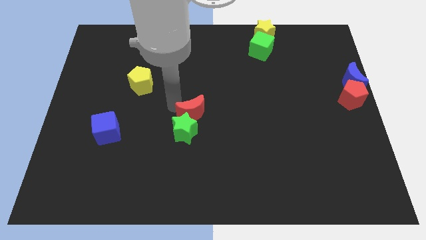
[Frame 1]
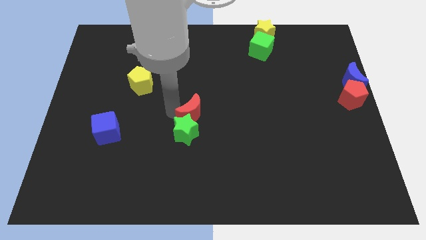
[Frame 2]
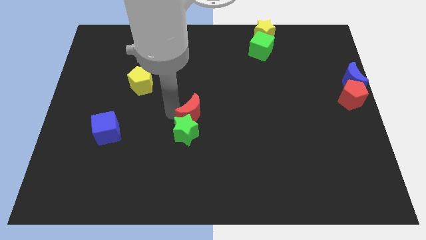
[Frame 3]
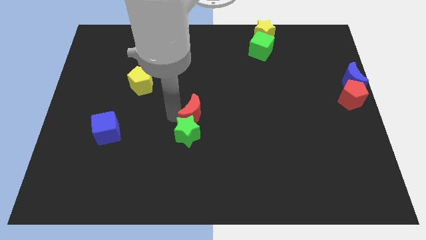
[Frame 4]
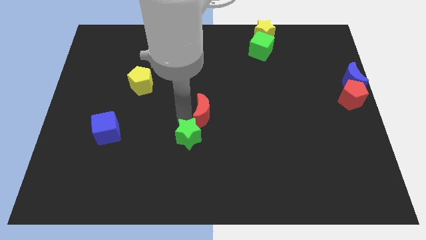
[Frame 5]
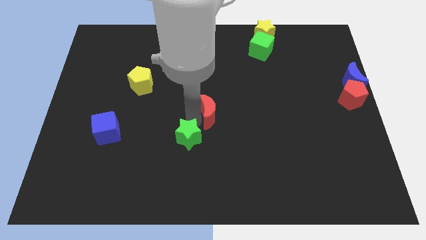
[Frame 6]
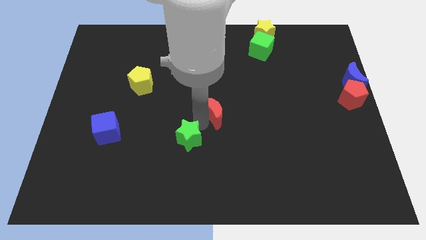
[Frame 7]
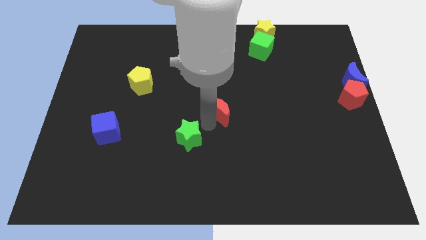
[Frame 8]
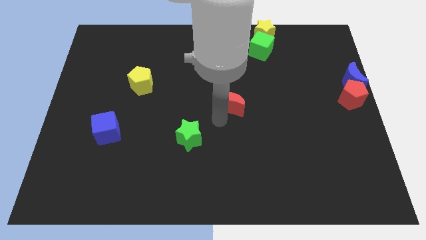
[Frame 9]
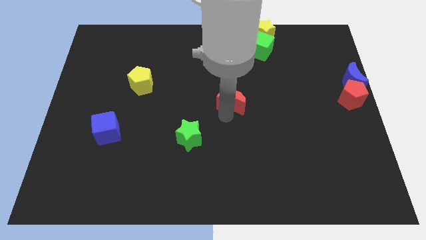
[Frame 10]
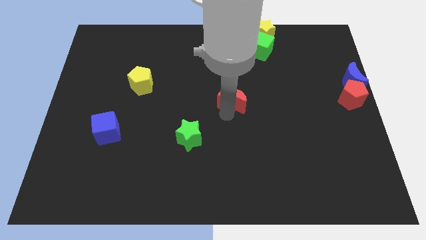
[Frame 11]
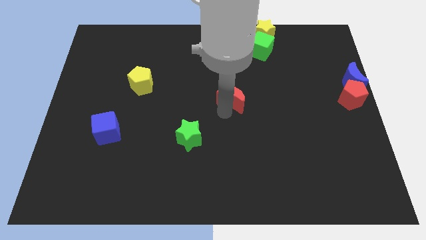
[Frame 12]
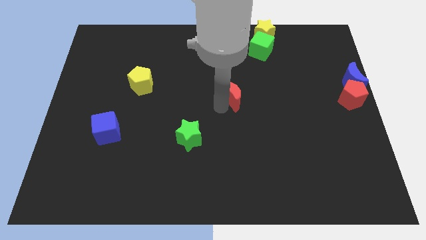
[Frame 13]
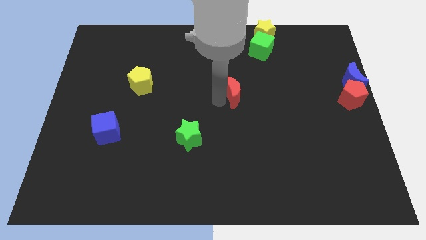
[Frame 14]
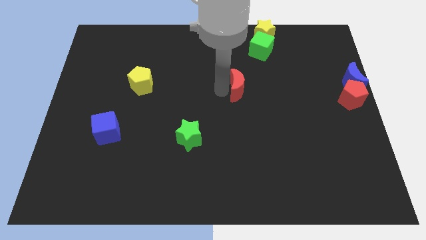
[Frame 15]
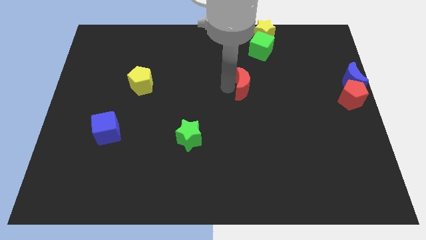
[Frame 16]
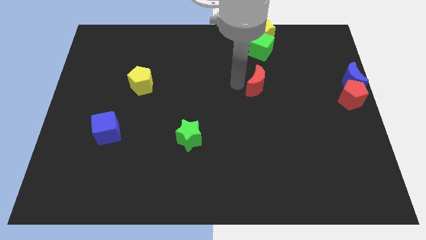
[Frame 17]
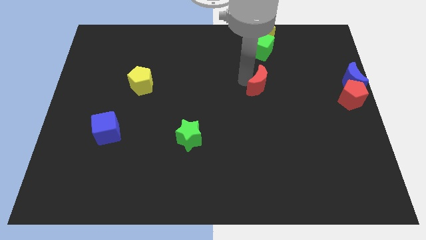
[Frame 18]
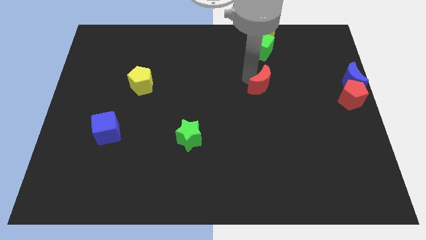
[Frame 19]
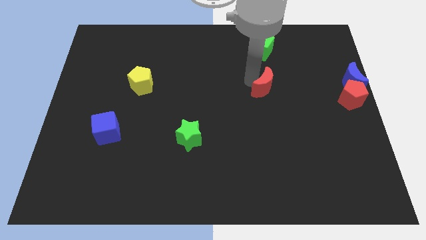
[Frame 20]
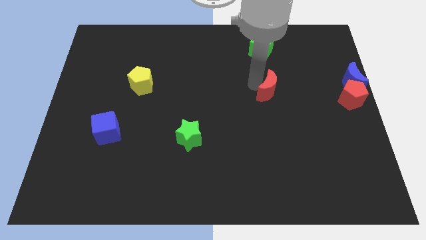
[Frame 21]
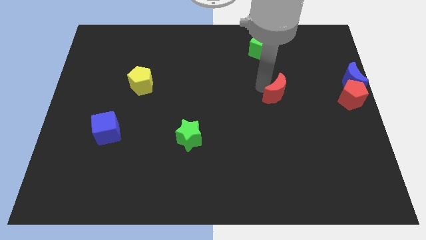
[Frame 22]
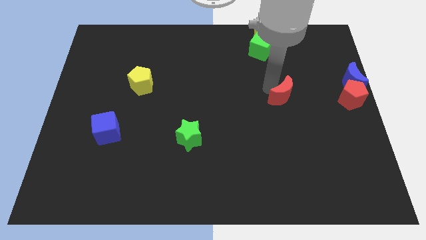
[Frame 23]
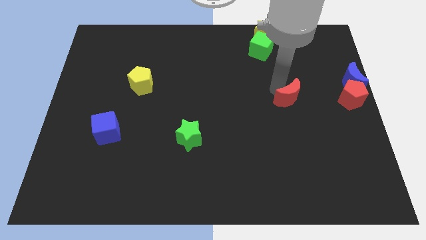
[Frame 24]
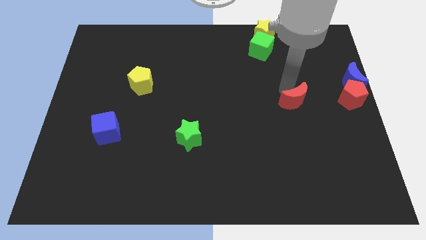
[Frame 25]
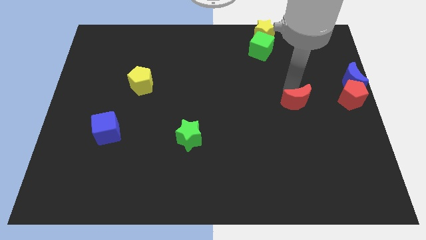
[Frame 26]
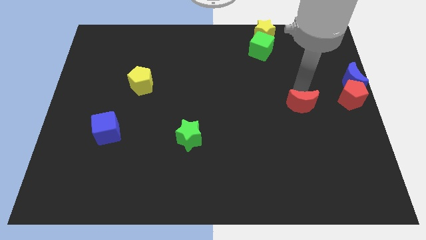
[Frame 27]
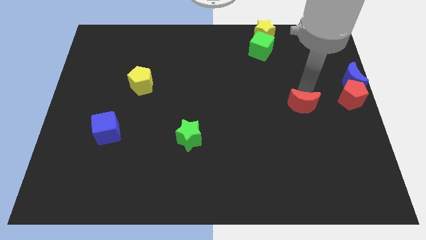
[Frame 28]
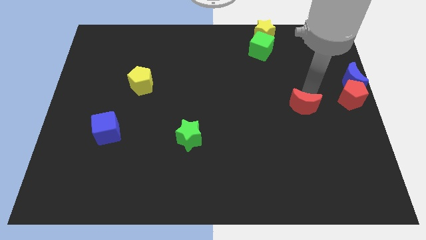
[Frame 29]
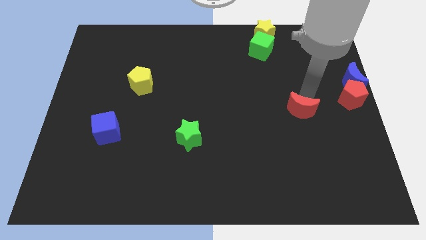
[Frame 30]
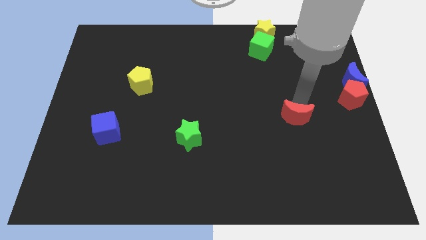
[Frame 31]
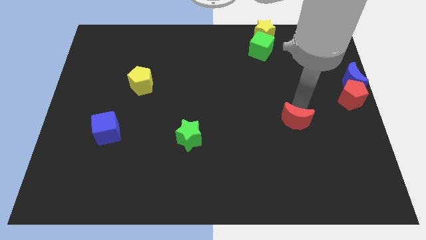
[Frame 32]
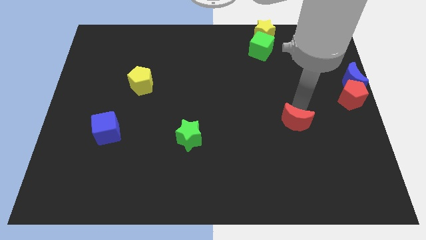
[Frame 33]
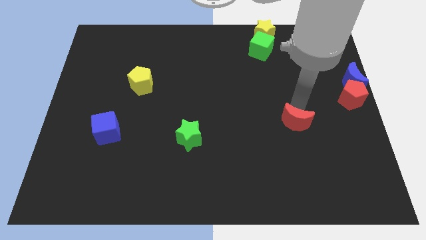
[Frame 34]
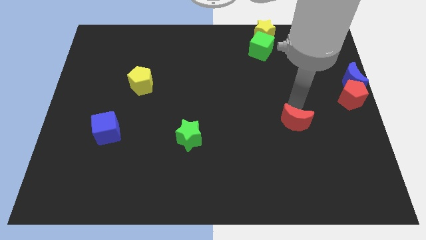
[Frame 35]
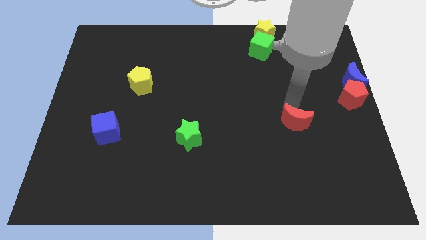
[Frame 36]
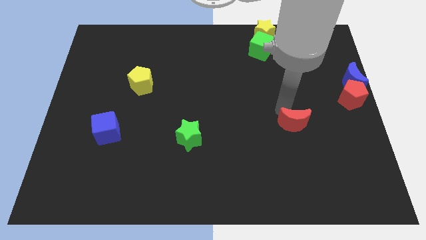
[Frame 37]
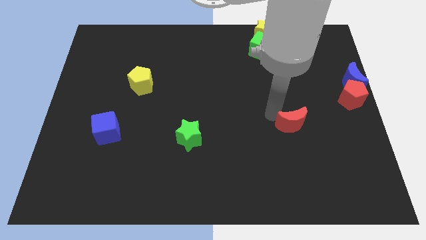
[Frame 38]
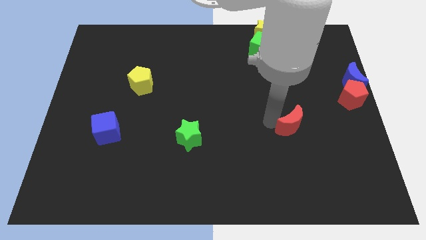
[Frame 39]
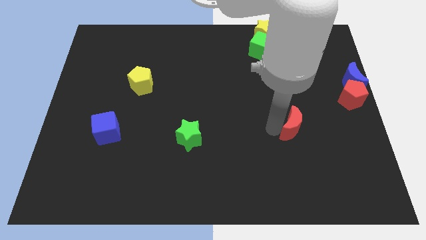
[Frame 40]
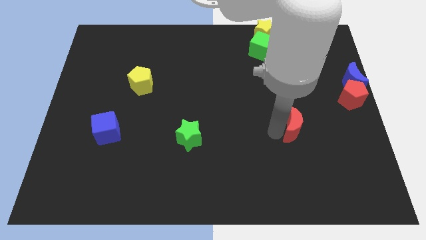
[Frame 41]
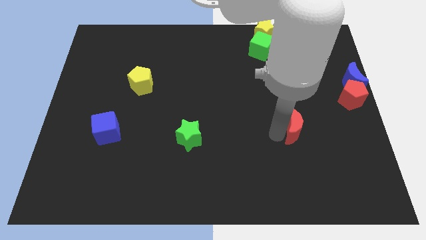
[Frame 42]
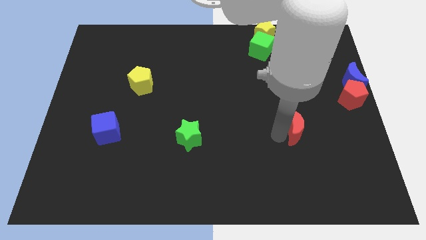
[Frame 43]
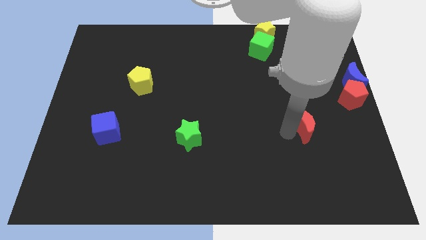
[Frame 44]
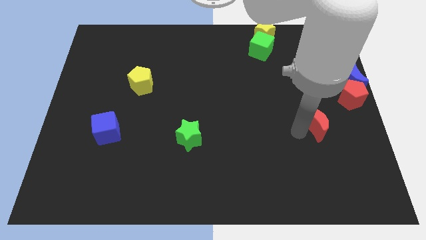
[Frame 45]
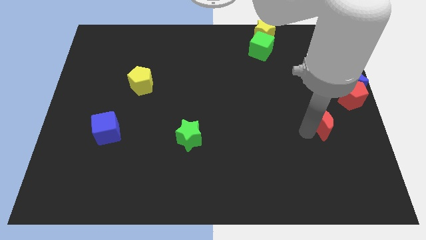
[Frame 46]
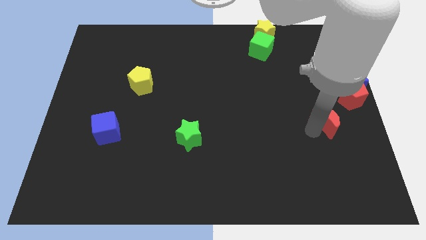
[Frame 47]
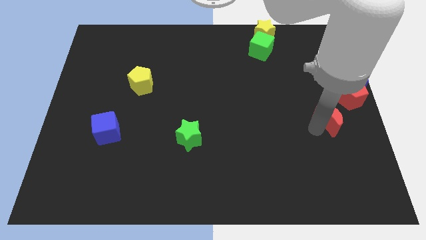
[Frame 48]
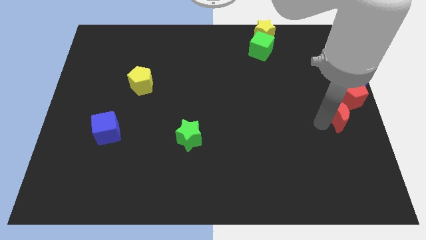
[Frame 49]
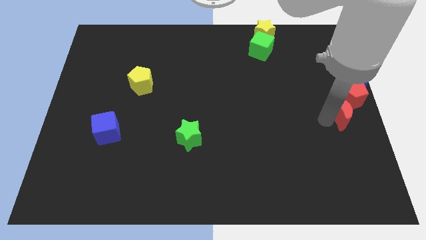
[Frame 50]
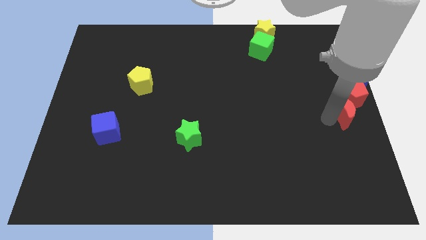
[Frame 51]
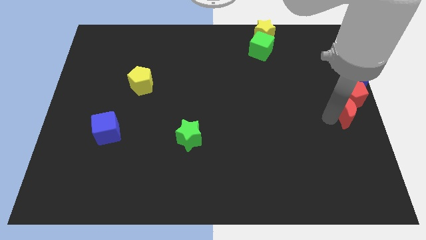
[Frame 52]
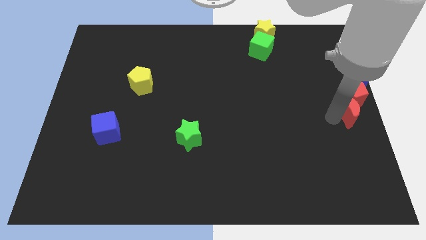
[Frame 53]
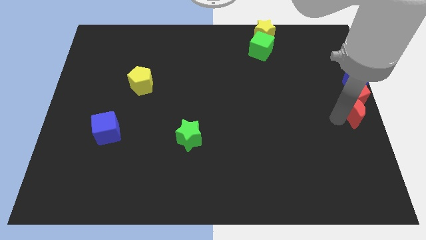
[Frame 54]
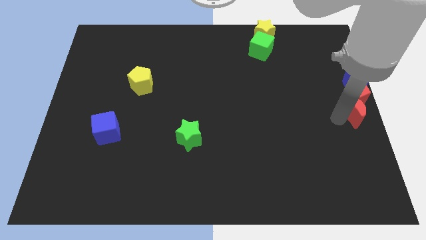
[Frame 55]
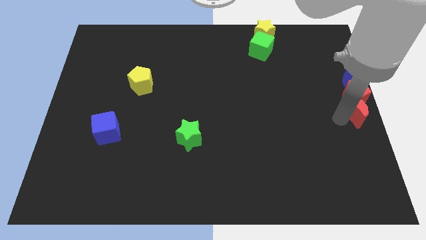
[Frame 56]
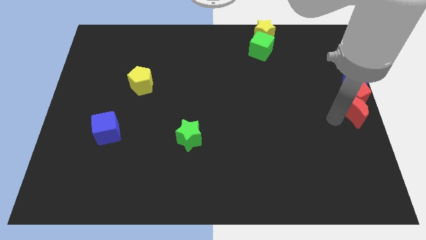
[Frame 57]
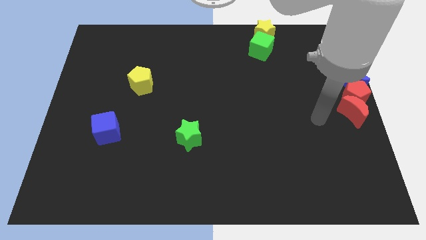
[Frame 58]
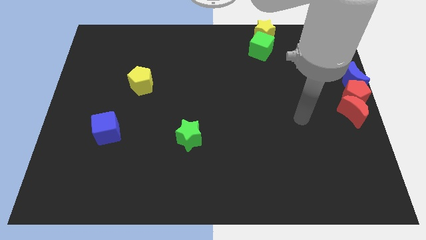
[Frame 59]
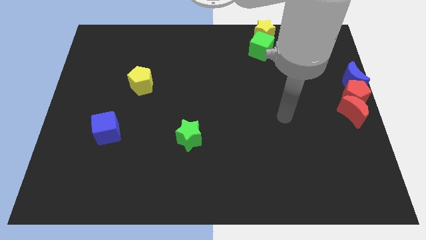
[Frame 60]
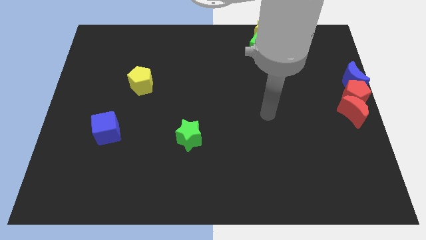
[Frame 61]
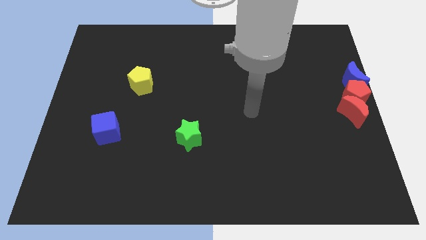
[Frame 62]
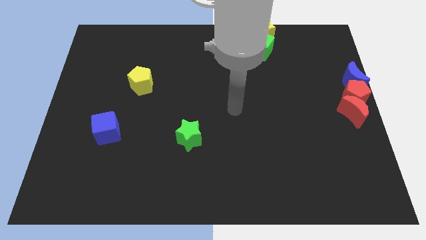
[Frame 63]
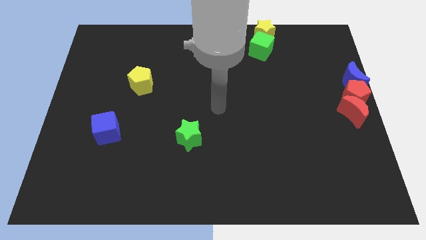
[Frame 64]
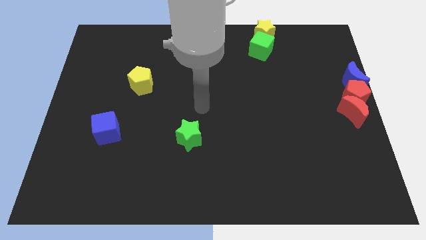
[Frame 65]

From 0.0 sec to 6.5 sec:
push the red crescent into the red pentagon

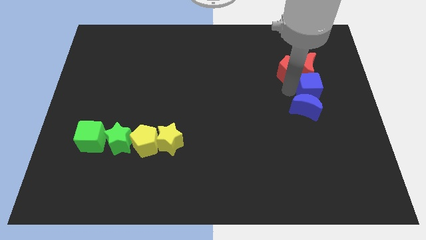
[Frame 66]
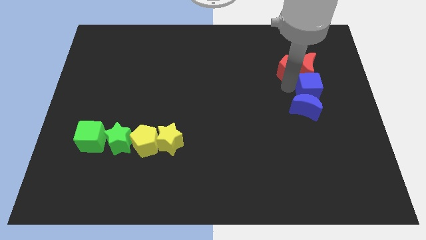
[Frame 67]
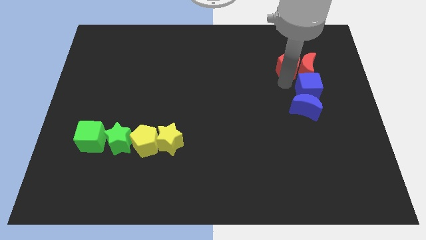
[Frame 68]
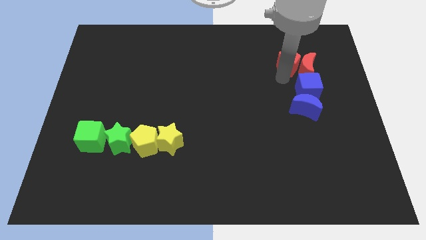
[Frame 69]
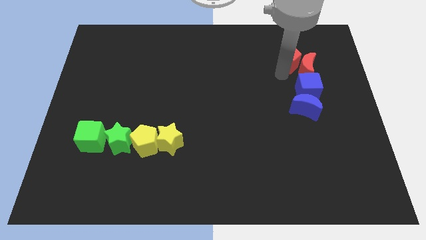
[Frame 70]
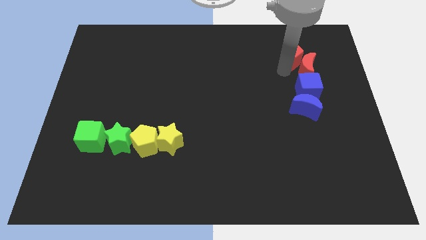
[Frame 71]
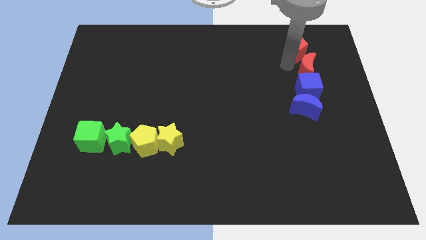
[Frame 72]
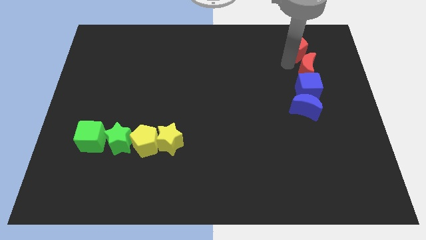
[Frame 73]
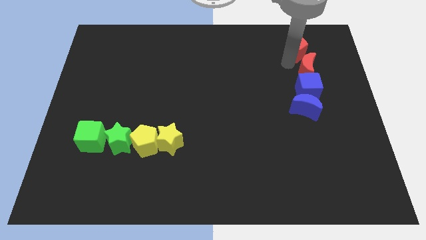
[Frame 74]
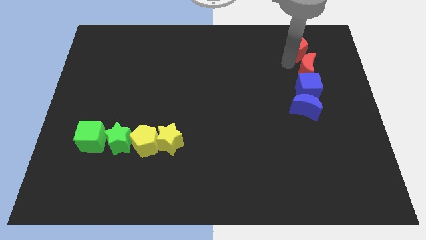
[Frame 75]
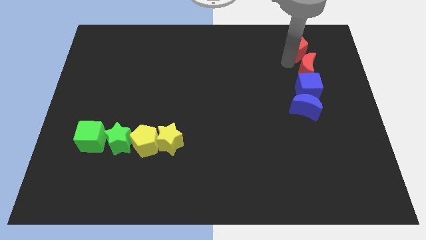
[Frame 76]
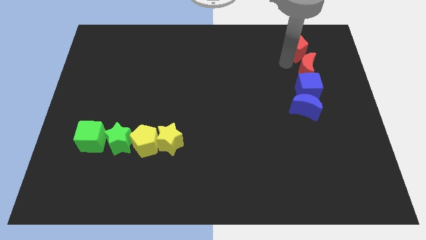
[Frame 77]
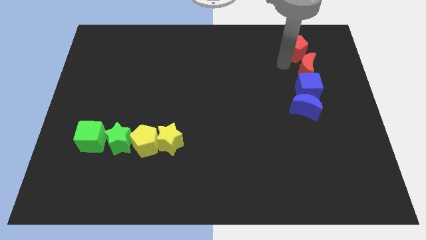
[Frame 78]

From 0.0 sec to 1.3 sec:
push the red pentagon above the red crescent

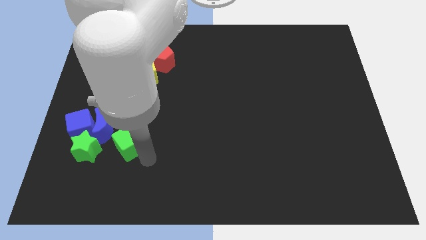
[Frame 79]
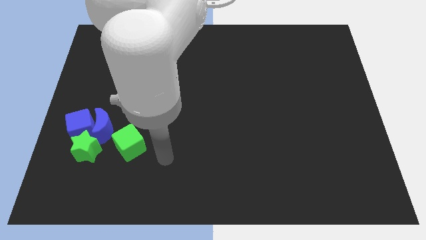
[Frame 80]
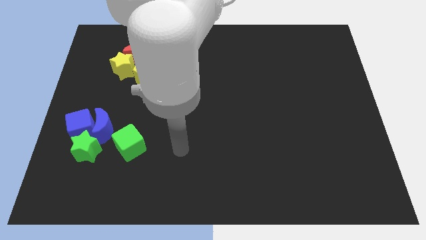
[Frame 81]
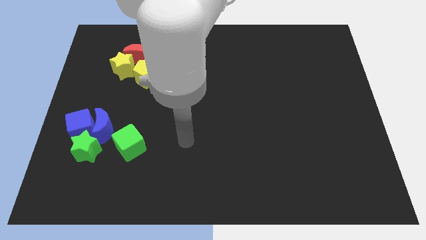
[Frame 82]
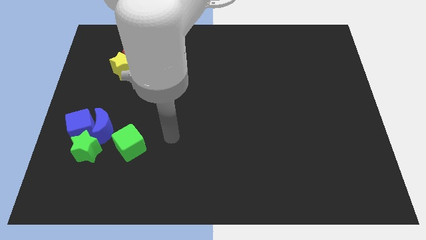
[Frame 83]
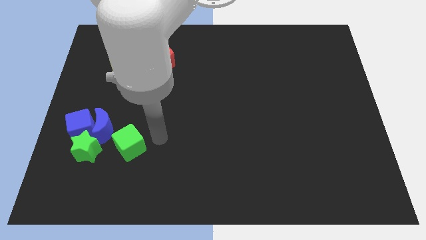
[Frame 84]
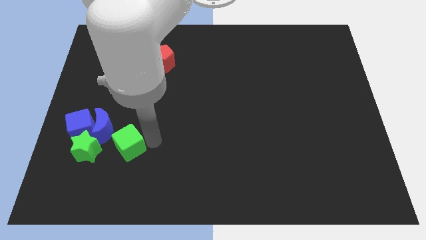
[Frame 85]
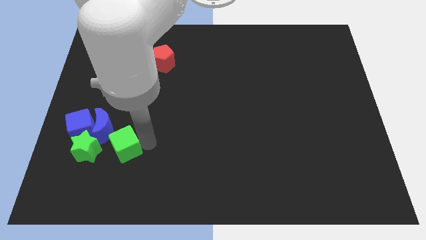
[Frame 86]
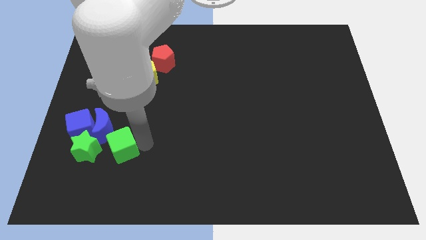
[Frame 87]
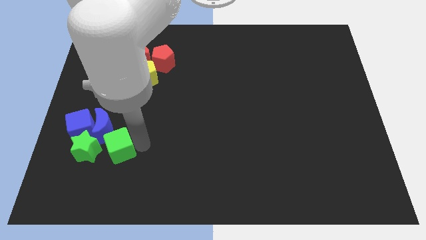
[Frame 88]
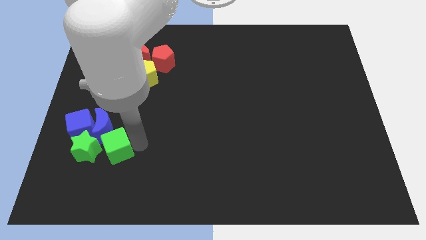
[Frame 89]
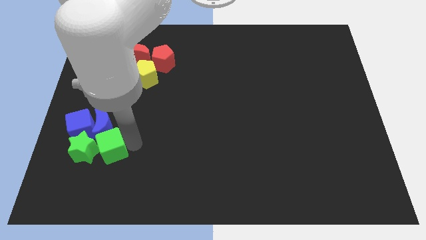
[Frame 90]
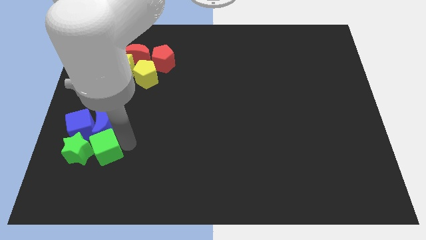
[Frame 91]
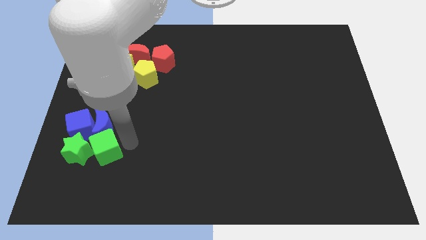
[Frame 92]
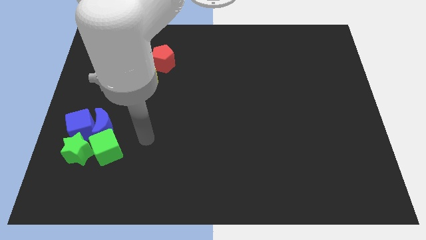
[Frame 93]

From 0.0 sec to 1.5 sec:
move the green cube into the green star
